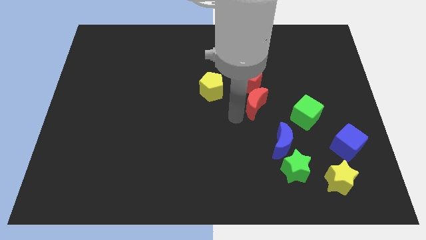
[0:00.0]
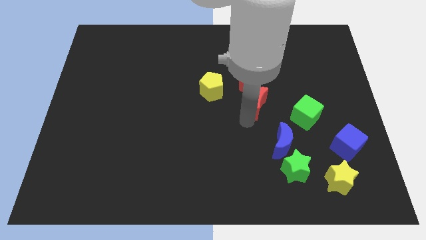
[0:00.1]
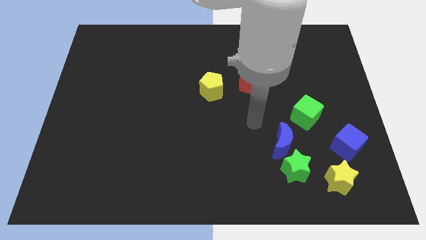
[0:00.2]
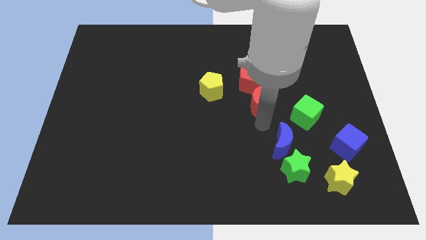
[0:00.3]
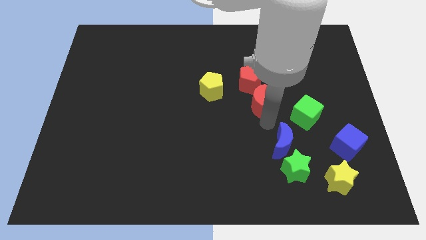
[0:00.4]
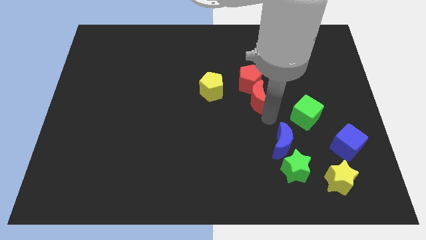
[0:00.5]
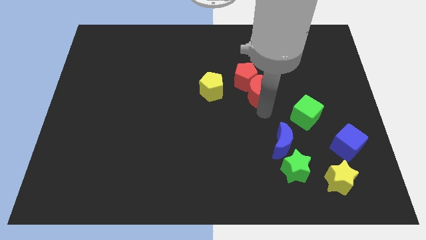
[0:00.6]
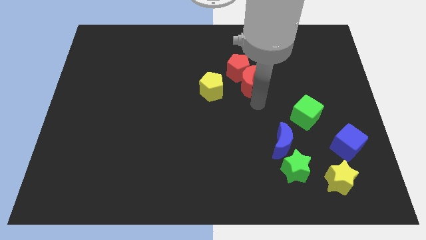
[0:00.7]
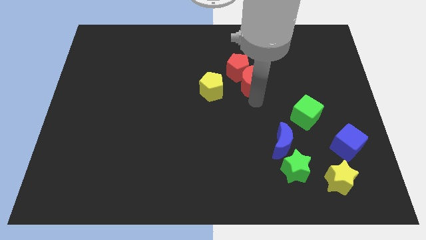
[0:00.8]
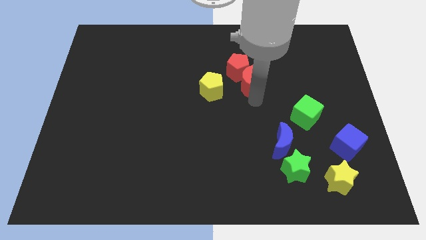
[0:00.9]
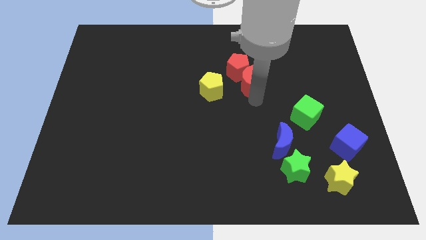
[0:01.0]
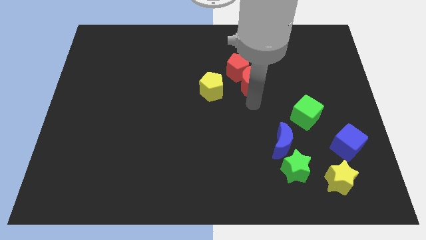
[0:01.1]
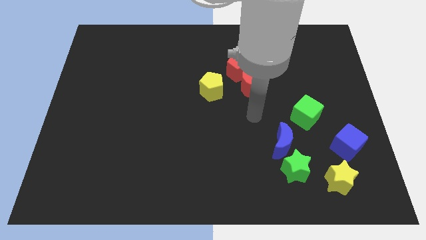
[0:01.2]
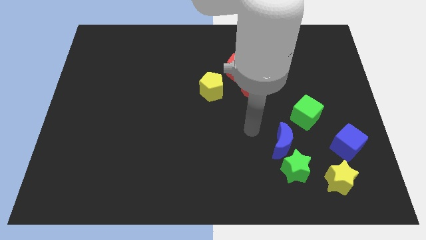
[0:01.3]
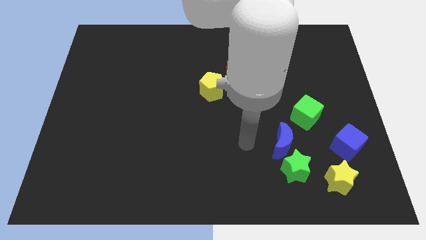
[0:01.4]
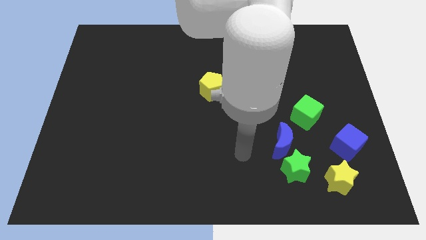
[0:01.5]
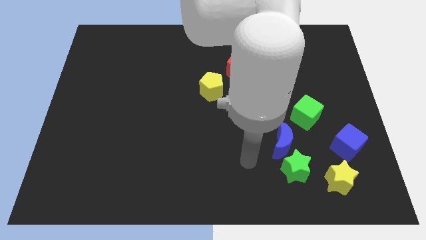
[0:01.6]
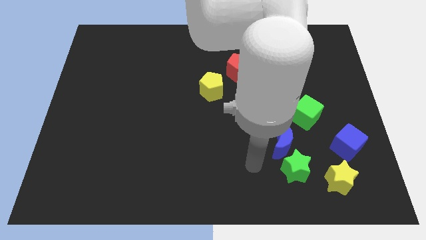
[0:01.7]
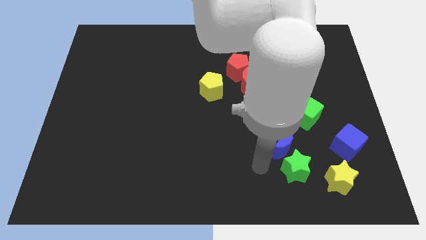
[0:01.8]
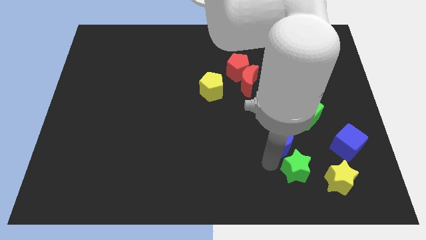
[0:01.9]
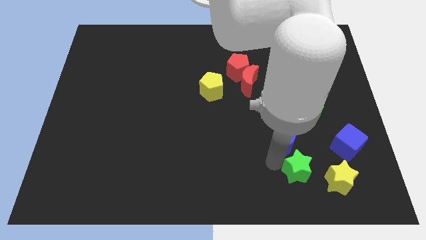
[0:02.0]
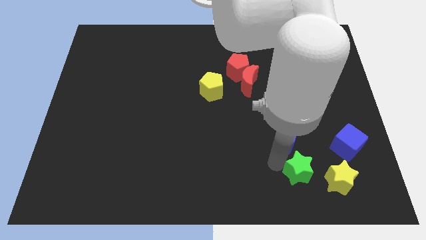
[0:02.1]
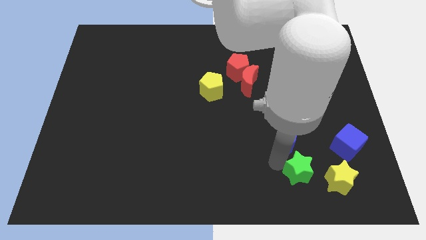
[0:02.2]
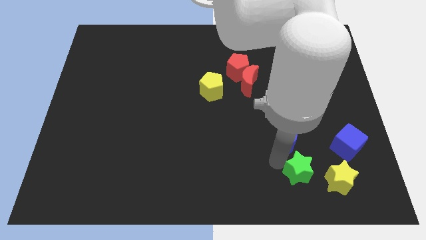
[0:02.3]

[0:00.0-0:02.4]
slightly push red moon along with red pentagon upwards

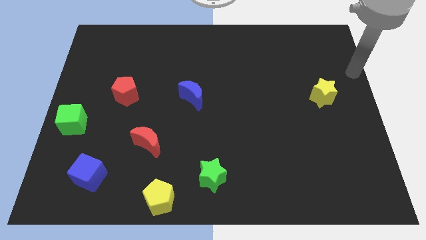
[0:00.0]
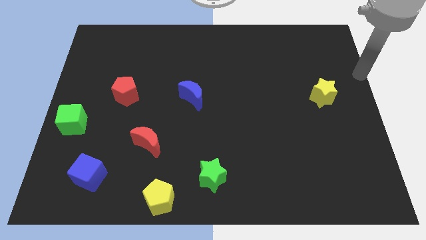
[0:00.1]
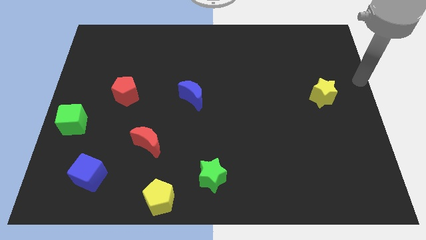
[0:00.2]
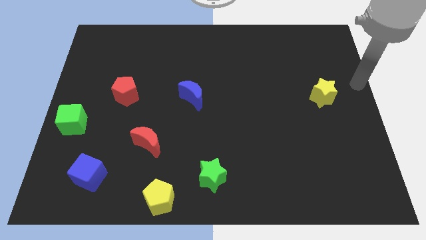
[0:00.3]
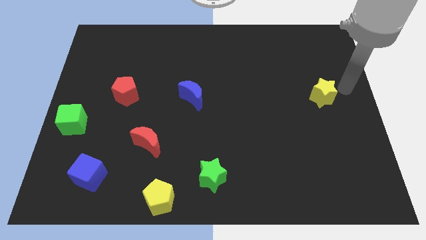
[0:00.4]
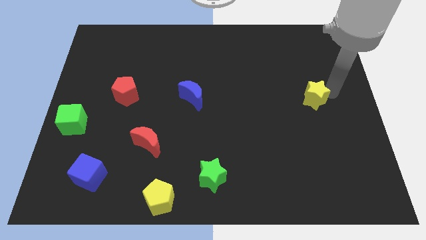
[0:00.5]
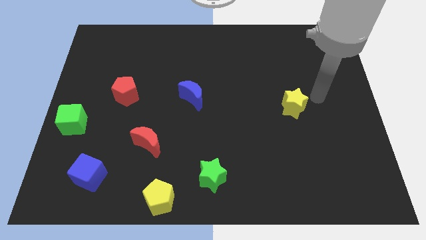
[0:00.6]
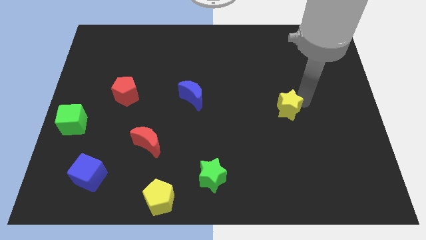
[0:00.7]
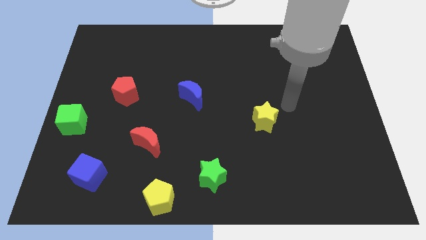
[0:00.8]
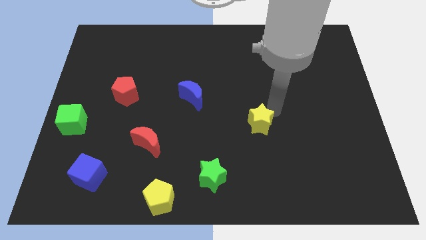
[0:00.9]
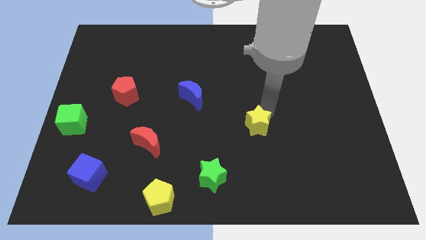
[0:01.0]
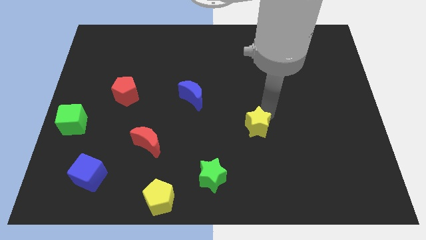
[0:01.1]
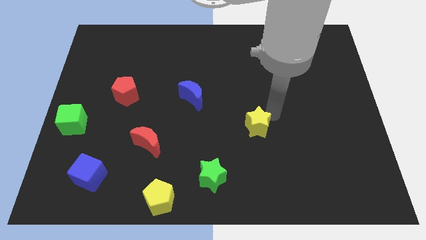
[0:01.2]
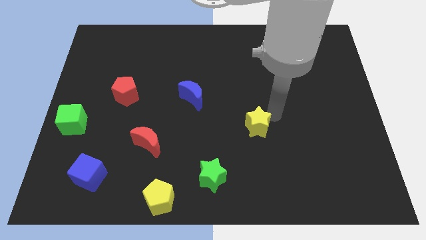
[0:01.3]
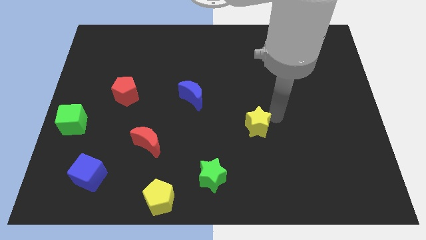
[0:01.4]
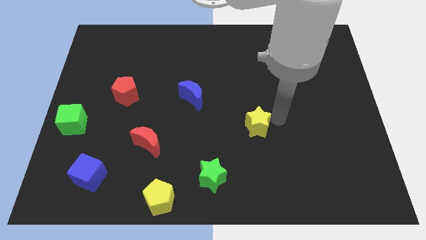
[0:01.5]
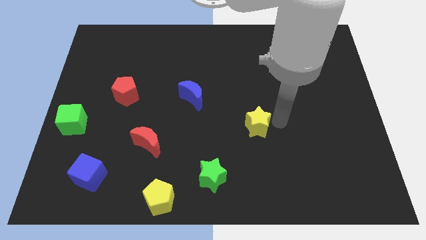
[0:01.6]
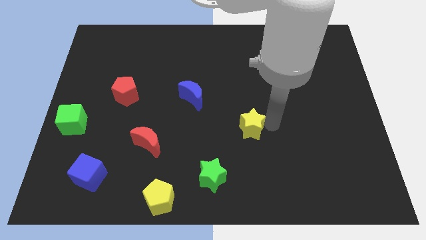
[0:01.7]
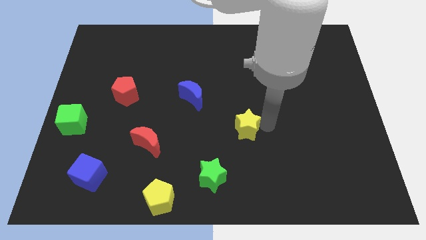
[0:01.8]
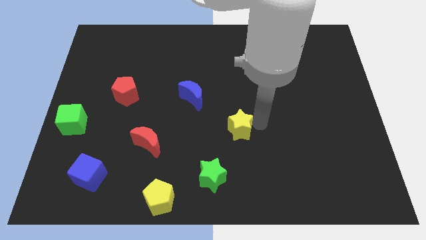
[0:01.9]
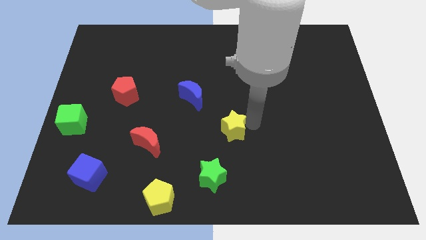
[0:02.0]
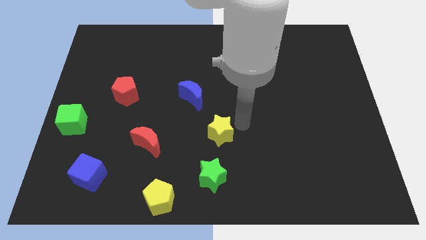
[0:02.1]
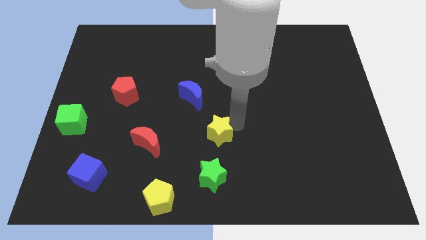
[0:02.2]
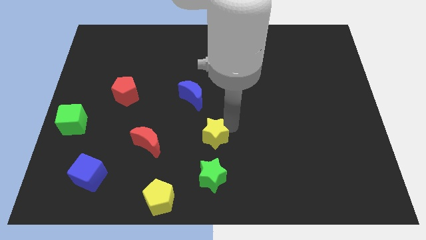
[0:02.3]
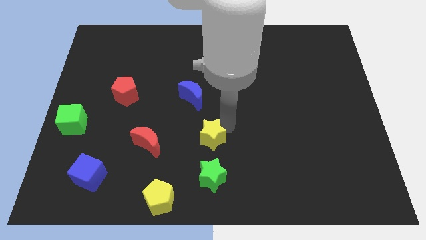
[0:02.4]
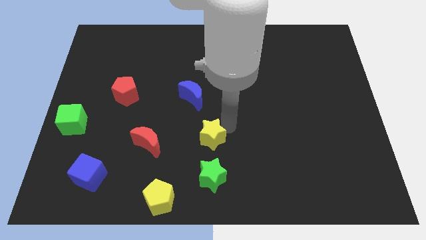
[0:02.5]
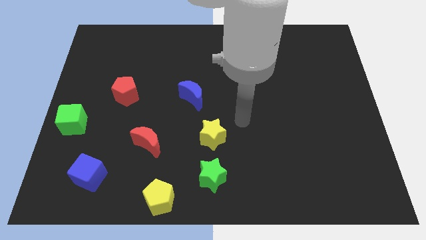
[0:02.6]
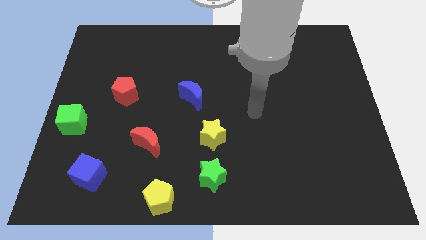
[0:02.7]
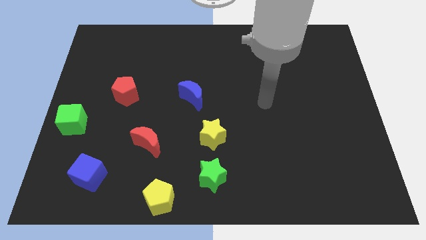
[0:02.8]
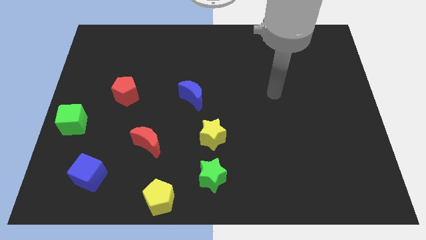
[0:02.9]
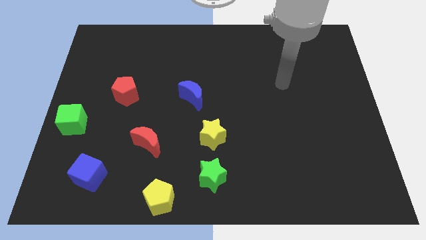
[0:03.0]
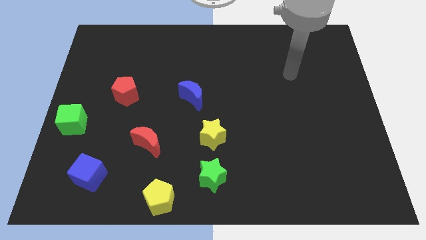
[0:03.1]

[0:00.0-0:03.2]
place yellow star vertically above the green star

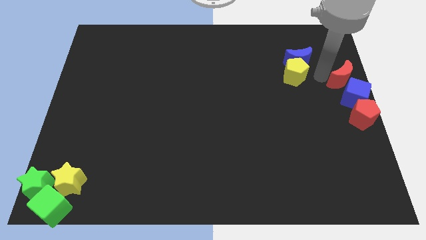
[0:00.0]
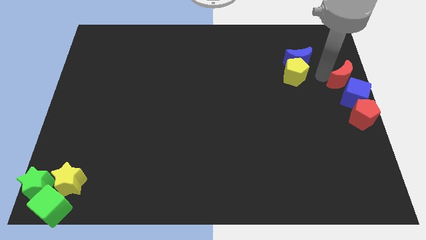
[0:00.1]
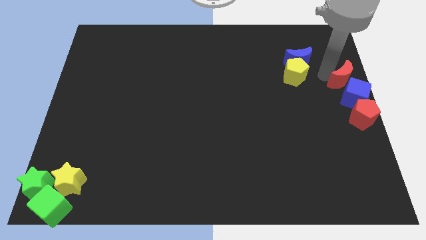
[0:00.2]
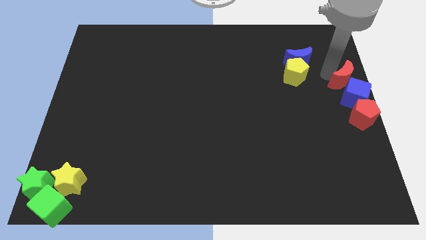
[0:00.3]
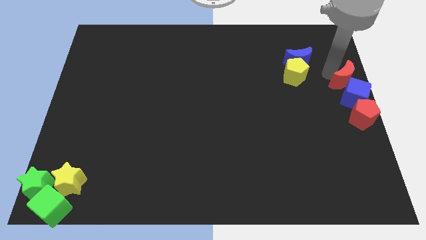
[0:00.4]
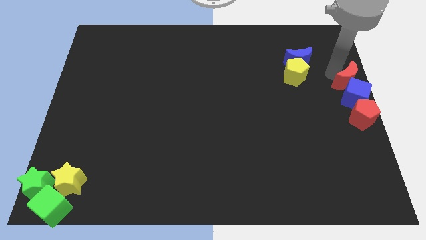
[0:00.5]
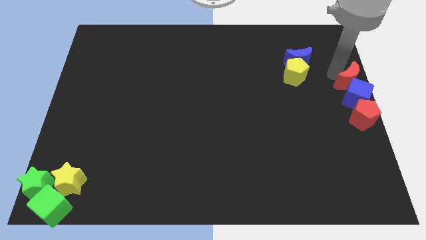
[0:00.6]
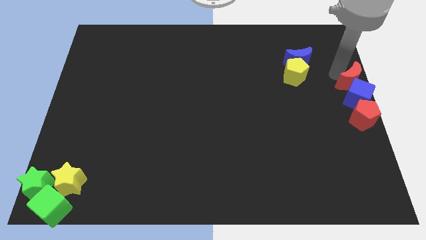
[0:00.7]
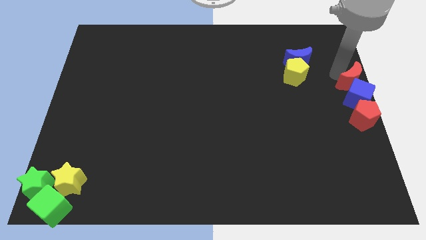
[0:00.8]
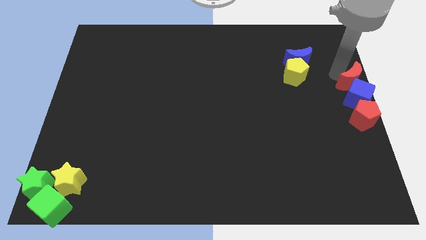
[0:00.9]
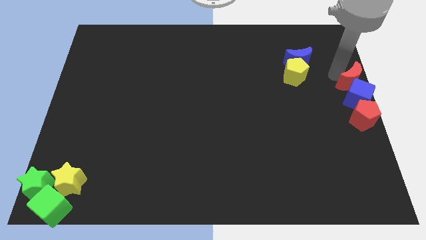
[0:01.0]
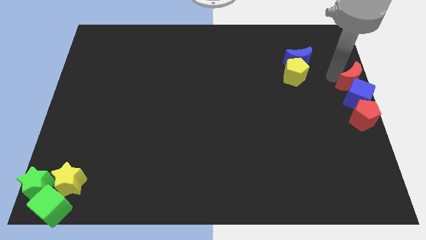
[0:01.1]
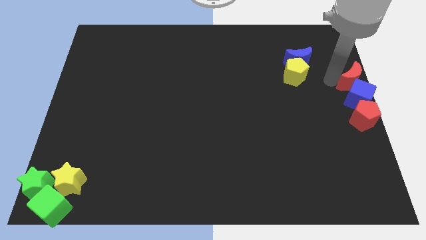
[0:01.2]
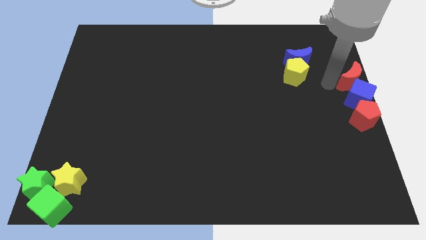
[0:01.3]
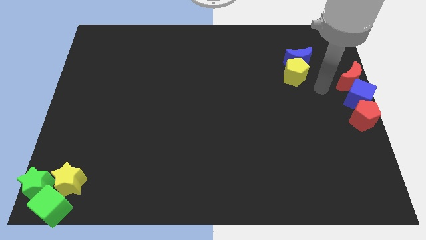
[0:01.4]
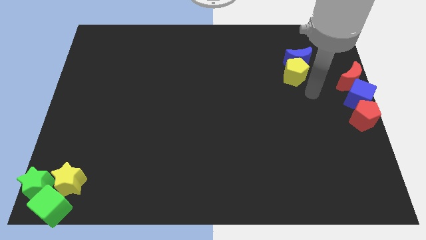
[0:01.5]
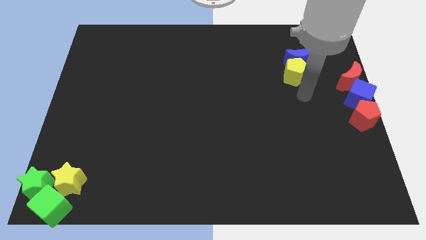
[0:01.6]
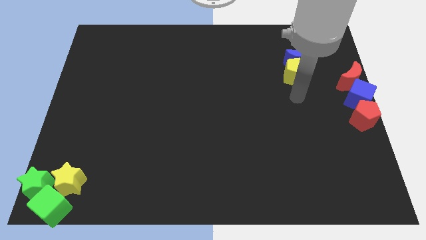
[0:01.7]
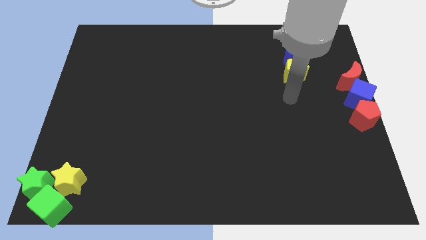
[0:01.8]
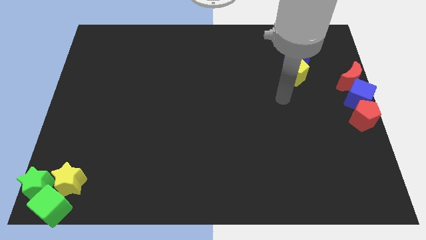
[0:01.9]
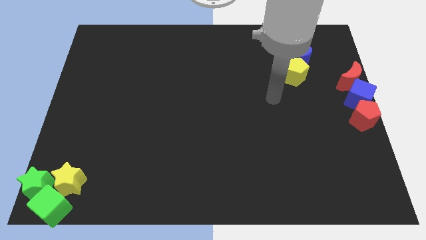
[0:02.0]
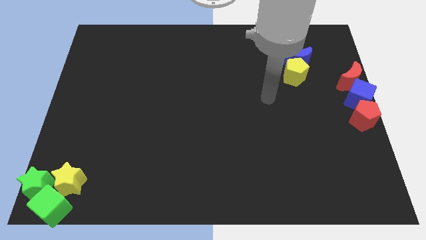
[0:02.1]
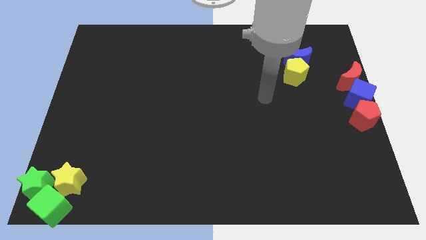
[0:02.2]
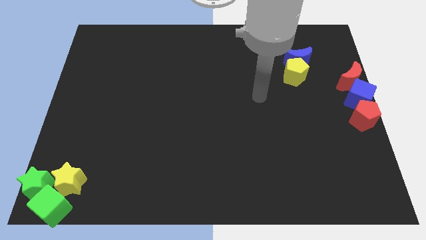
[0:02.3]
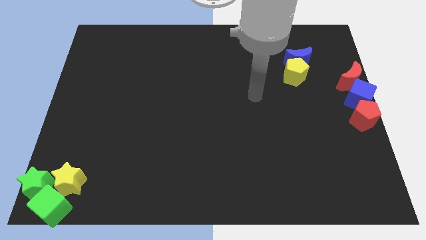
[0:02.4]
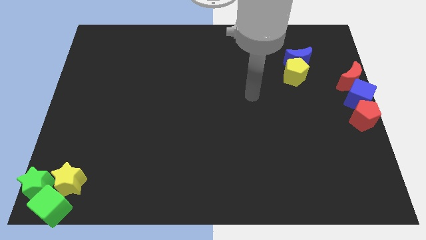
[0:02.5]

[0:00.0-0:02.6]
move the red crescent to the top of the blue cube

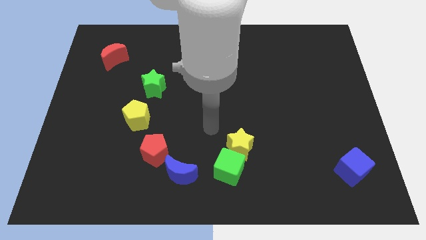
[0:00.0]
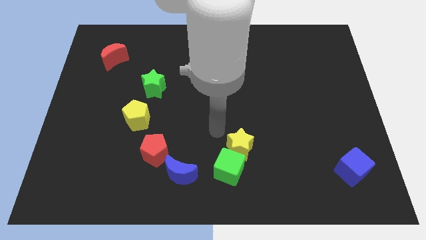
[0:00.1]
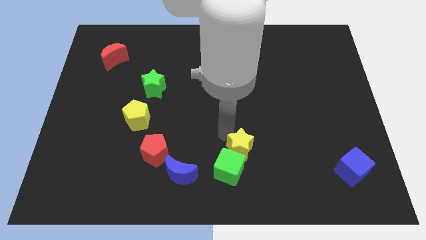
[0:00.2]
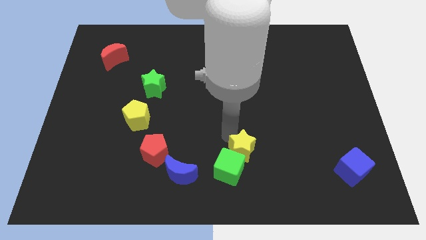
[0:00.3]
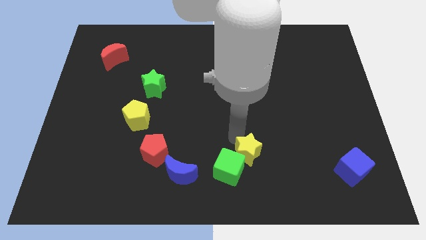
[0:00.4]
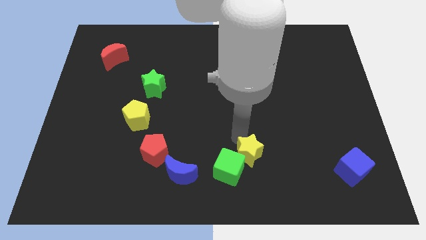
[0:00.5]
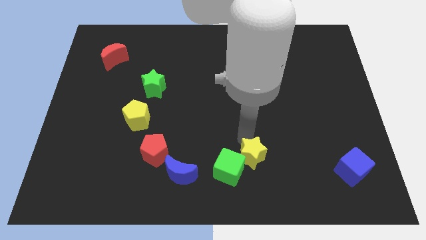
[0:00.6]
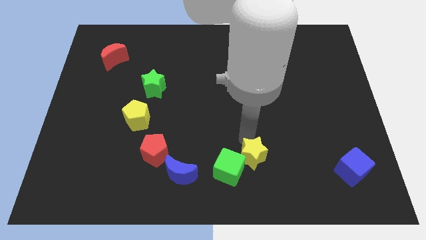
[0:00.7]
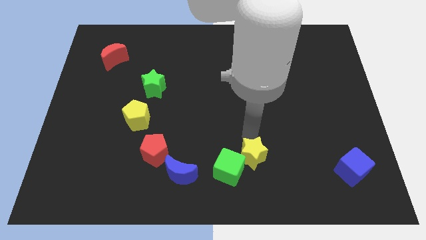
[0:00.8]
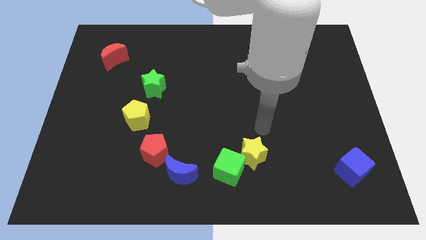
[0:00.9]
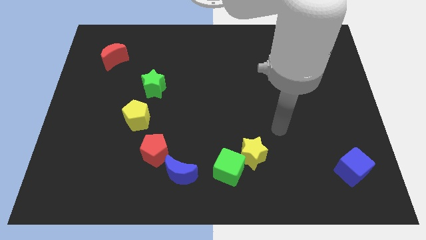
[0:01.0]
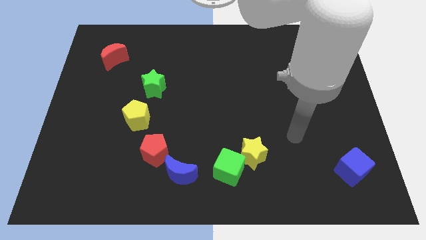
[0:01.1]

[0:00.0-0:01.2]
put the yellow star at the top right side of the green cube
